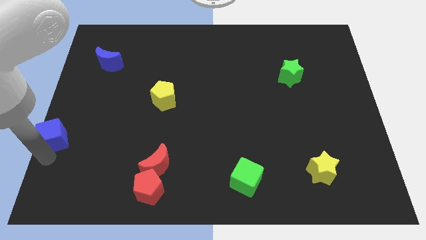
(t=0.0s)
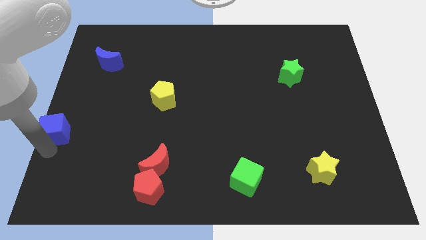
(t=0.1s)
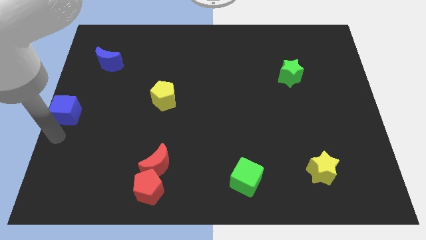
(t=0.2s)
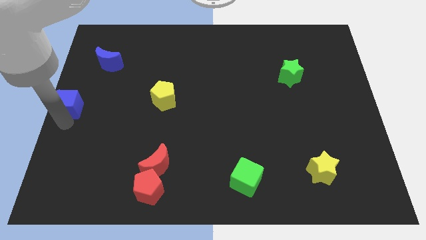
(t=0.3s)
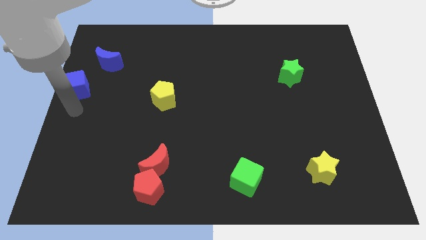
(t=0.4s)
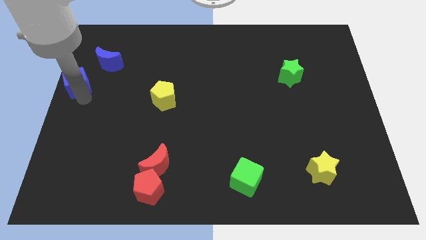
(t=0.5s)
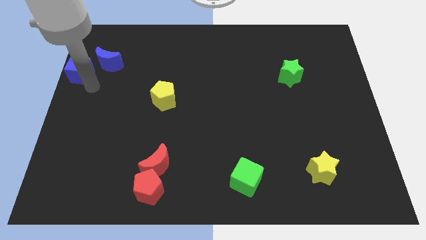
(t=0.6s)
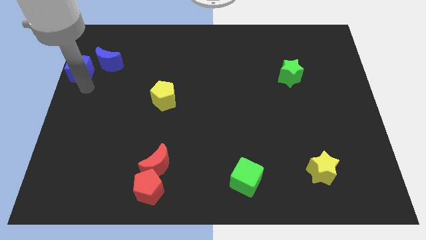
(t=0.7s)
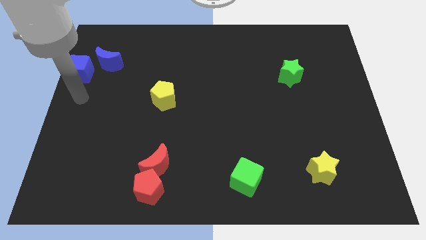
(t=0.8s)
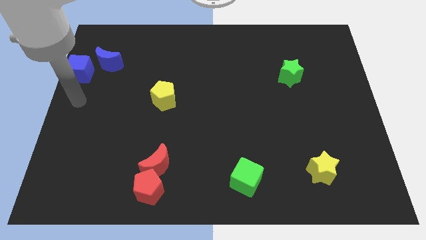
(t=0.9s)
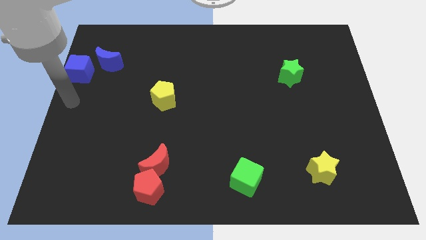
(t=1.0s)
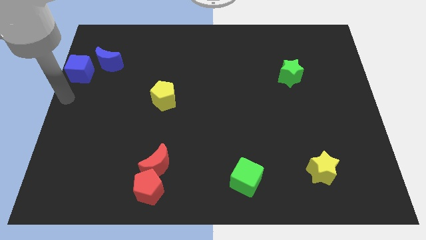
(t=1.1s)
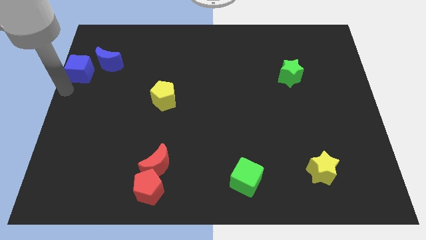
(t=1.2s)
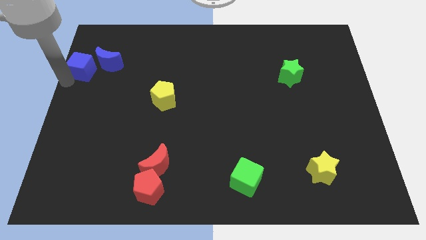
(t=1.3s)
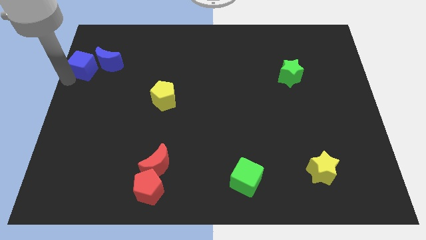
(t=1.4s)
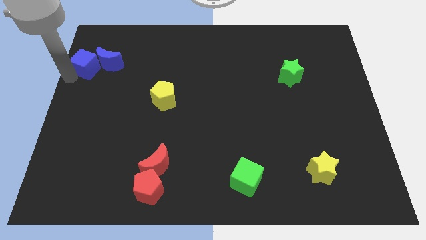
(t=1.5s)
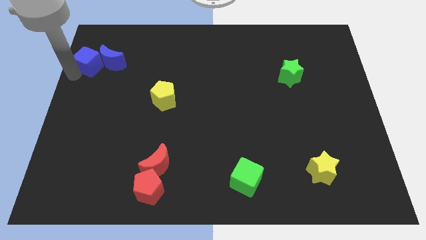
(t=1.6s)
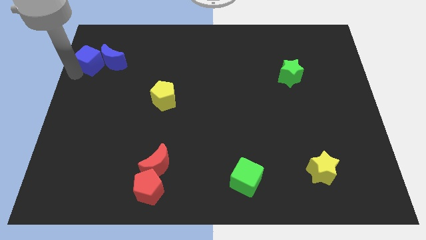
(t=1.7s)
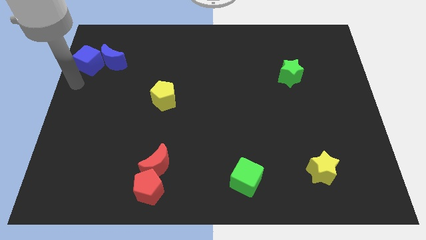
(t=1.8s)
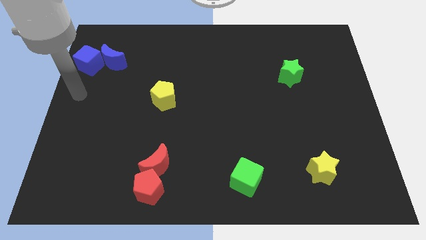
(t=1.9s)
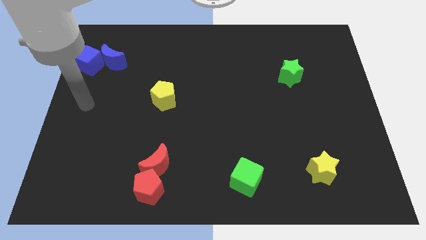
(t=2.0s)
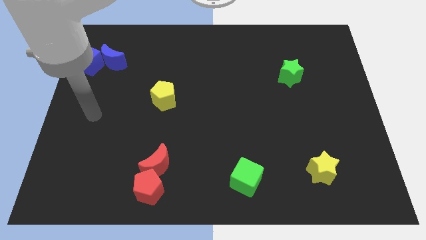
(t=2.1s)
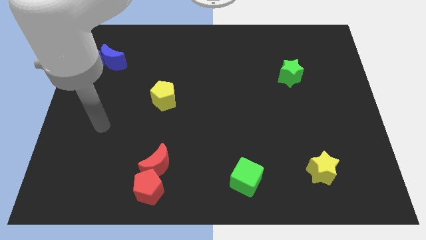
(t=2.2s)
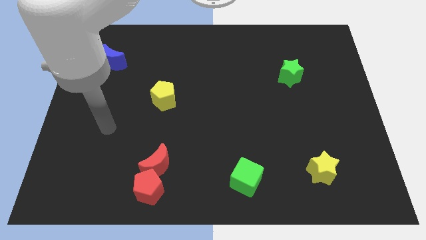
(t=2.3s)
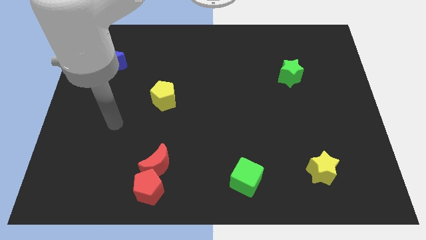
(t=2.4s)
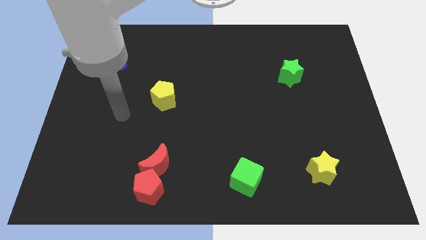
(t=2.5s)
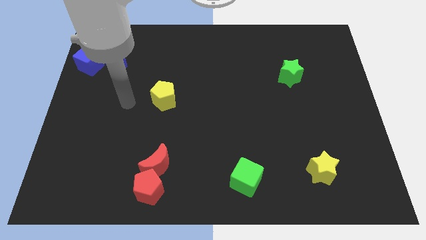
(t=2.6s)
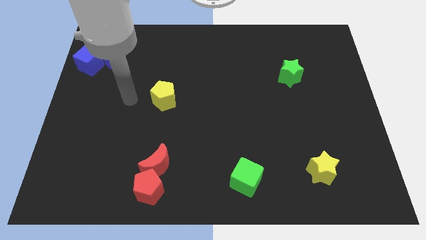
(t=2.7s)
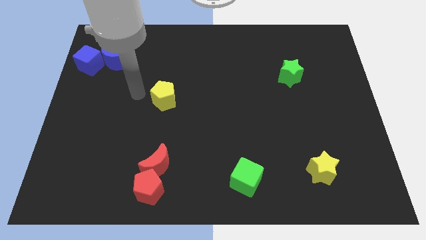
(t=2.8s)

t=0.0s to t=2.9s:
push the blue cube to the left of blue crescent

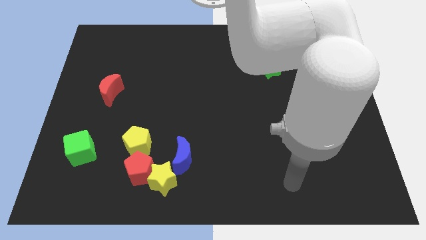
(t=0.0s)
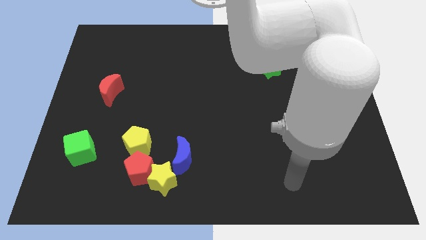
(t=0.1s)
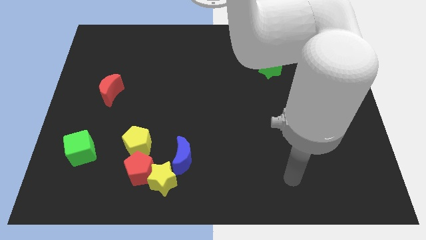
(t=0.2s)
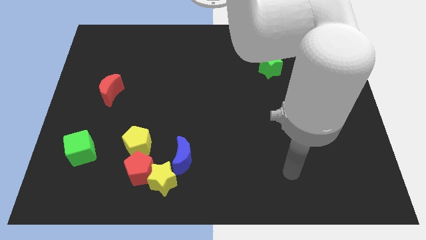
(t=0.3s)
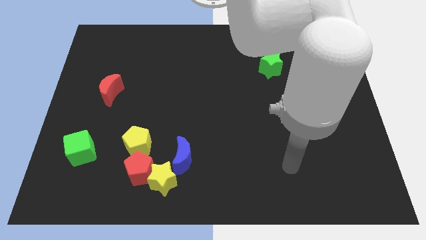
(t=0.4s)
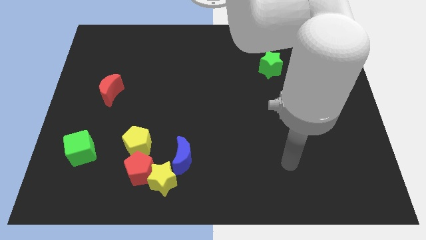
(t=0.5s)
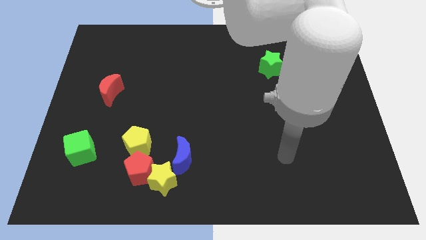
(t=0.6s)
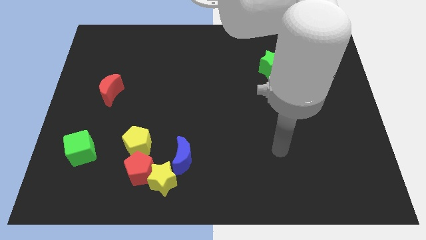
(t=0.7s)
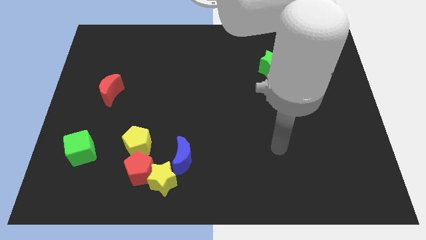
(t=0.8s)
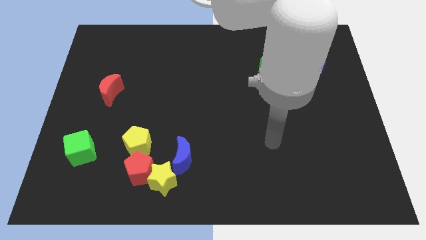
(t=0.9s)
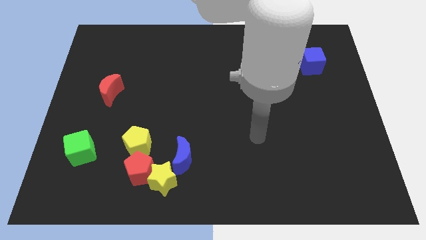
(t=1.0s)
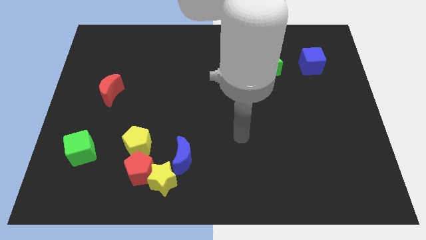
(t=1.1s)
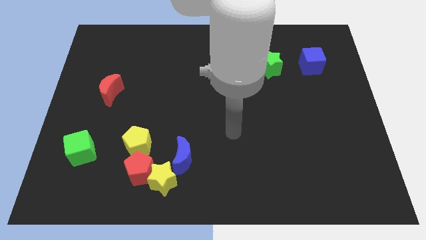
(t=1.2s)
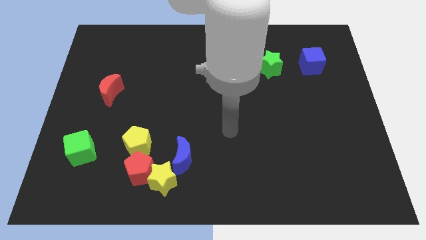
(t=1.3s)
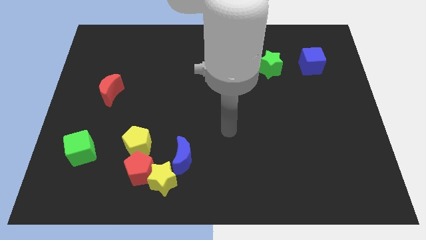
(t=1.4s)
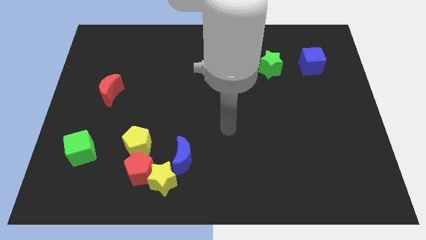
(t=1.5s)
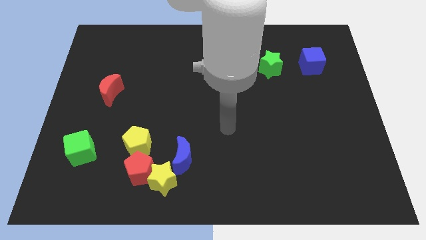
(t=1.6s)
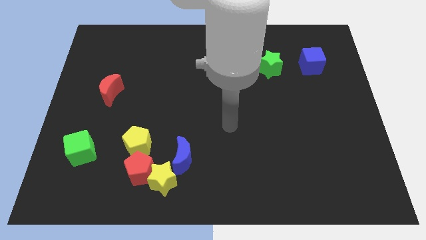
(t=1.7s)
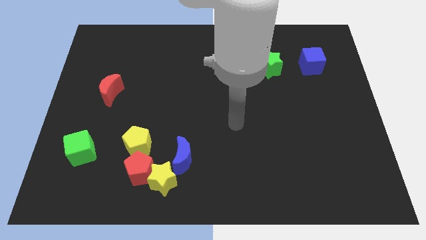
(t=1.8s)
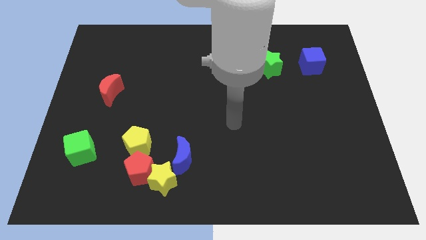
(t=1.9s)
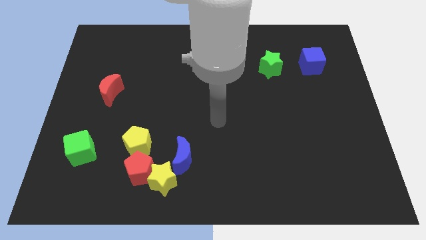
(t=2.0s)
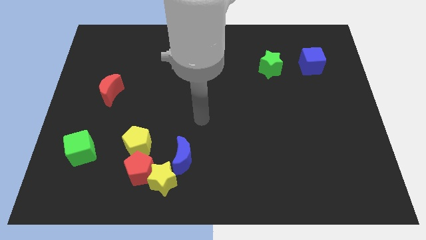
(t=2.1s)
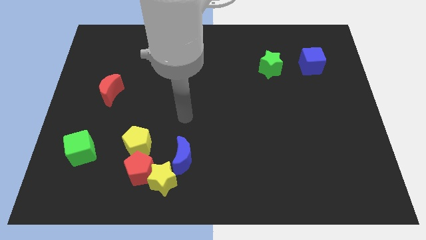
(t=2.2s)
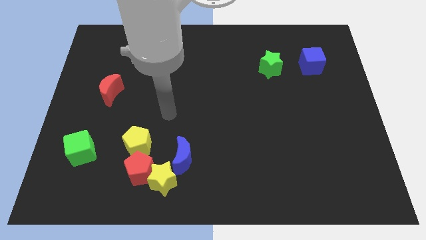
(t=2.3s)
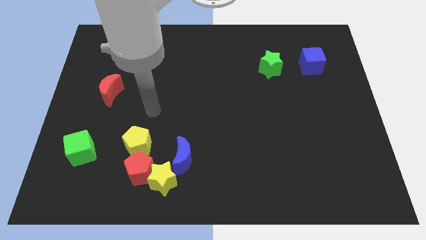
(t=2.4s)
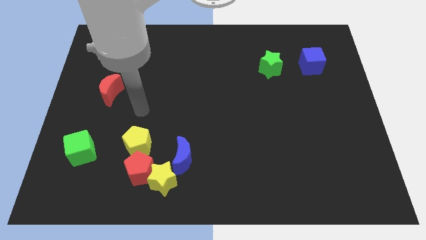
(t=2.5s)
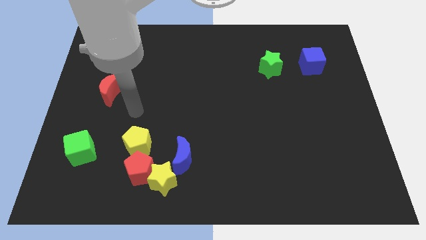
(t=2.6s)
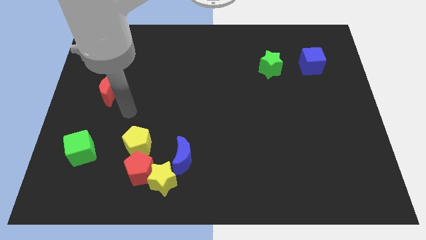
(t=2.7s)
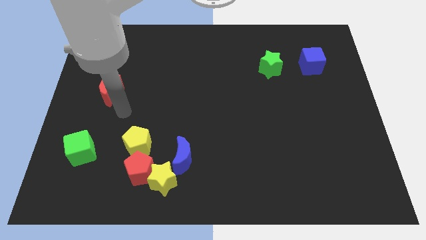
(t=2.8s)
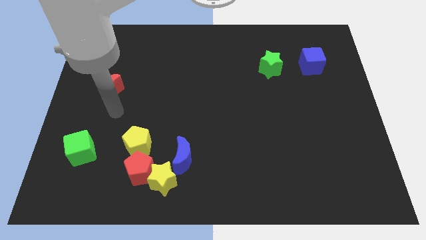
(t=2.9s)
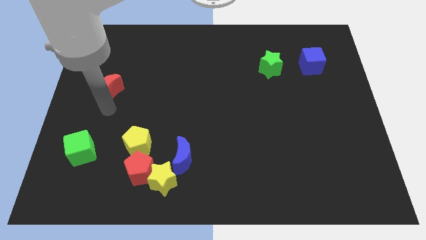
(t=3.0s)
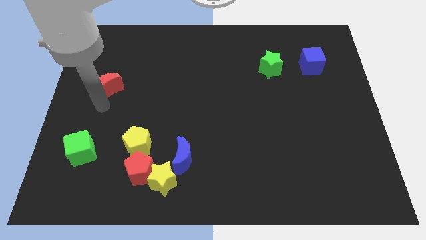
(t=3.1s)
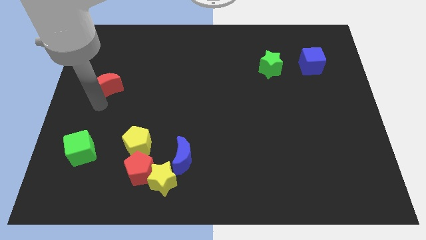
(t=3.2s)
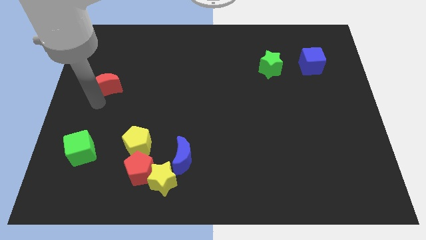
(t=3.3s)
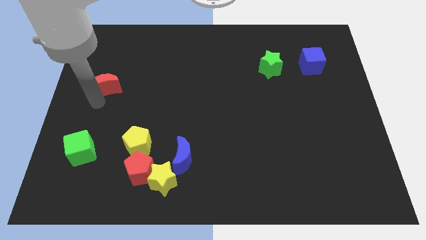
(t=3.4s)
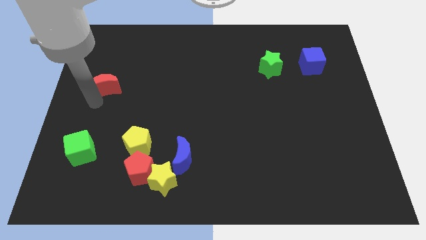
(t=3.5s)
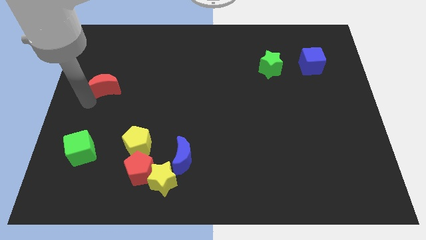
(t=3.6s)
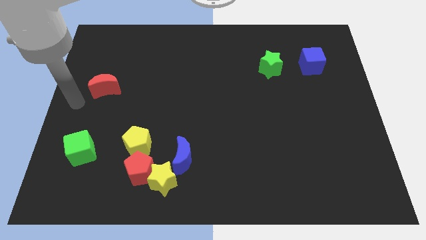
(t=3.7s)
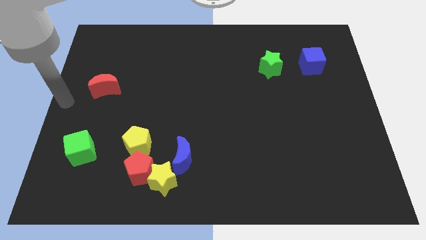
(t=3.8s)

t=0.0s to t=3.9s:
slightly move the red crescent towards top side

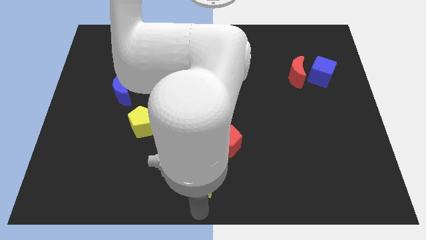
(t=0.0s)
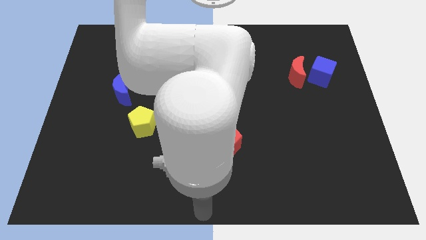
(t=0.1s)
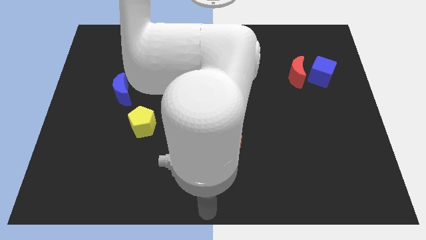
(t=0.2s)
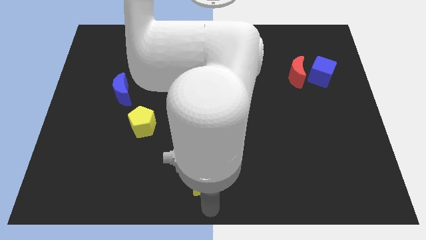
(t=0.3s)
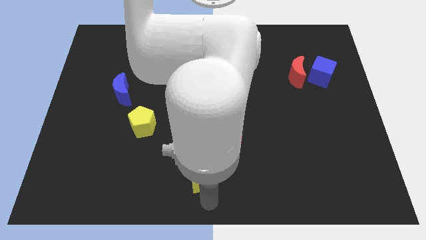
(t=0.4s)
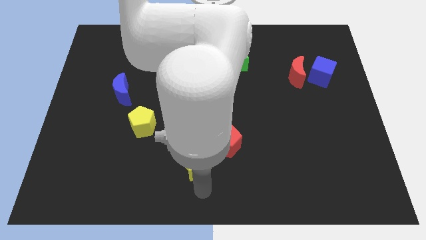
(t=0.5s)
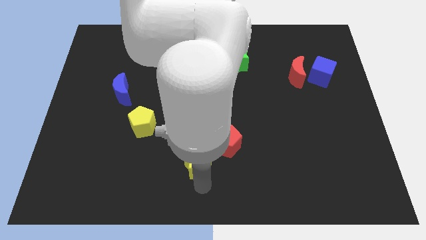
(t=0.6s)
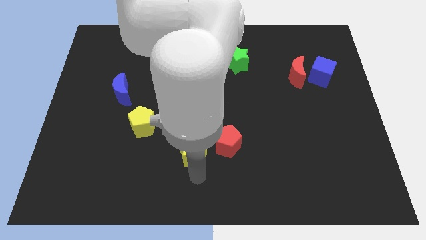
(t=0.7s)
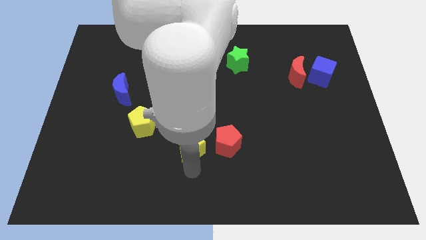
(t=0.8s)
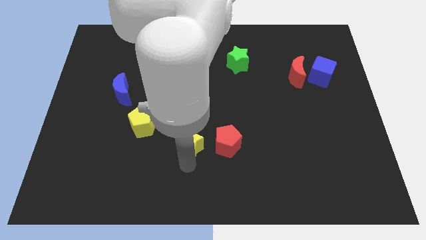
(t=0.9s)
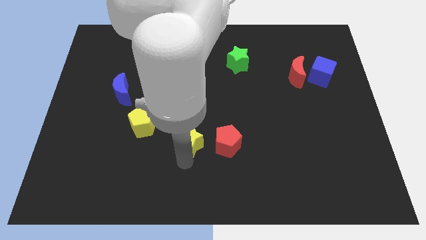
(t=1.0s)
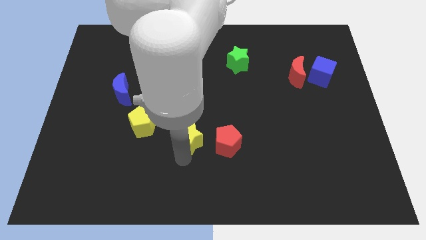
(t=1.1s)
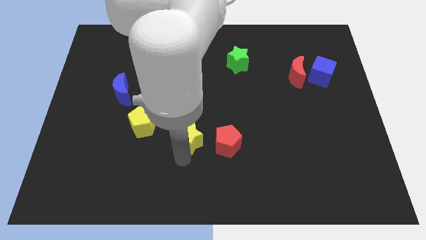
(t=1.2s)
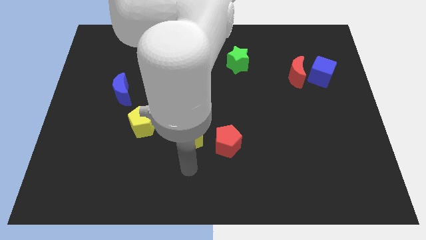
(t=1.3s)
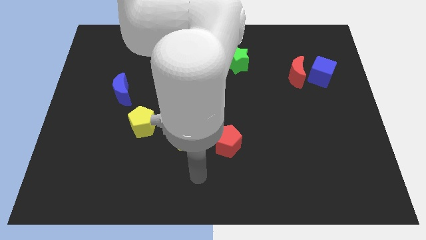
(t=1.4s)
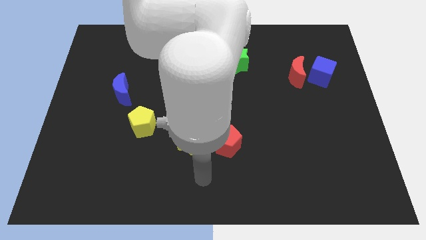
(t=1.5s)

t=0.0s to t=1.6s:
place the yellow star left to the red pentagon

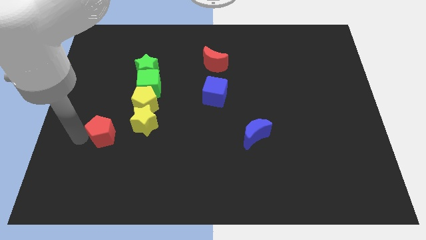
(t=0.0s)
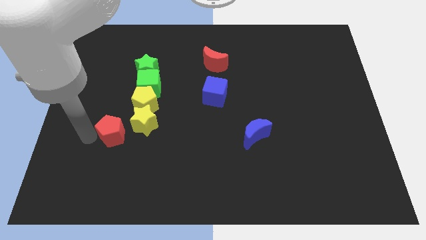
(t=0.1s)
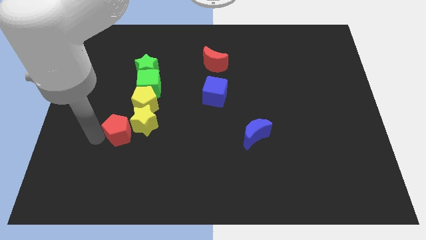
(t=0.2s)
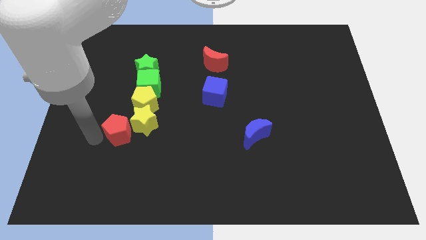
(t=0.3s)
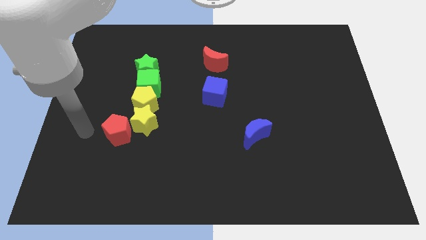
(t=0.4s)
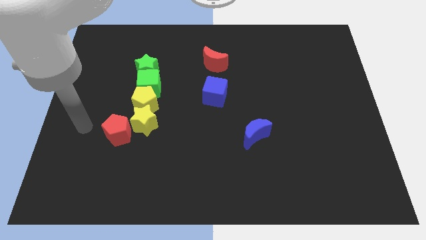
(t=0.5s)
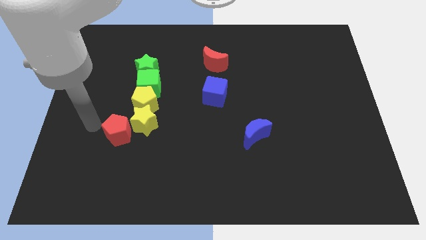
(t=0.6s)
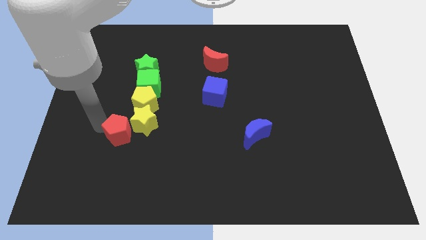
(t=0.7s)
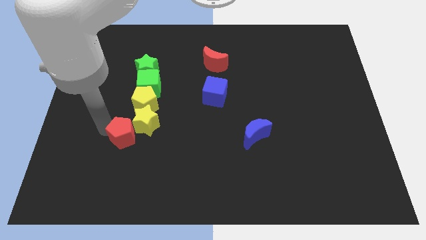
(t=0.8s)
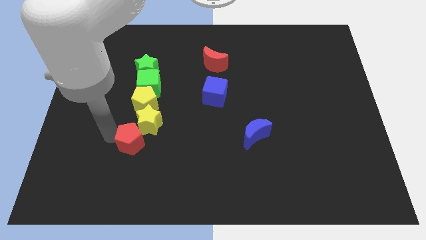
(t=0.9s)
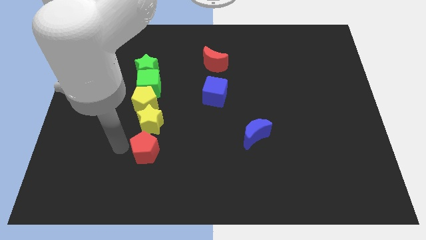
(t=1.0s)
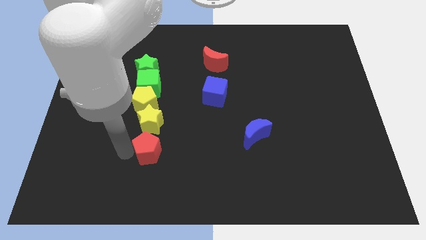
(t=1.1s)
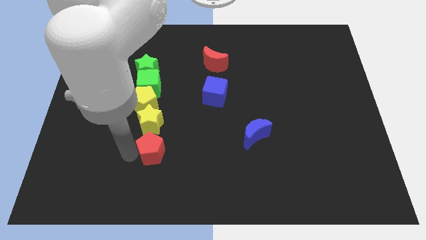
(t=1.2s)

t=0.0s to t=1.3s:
place the red pentagon vertically to the bottom of the yellow star
